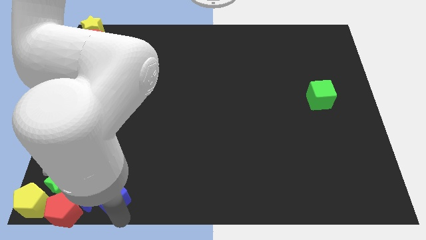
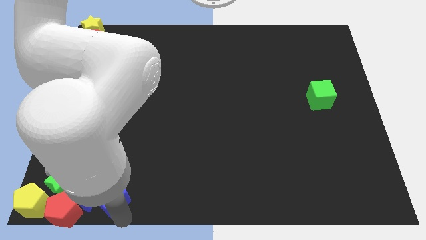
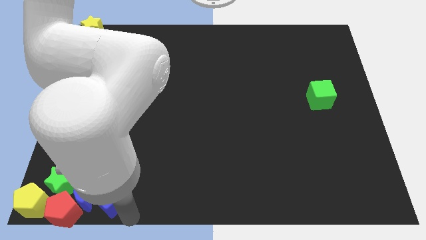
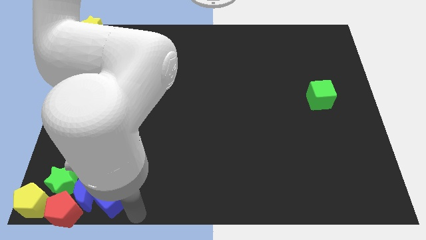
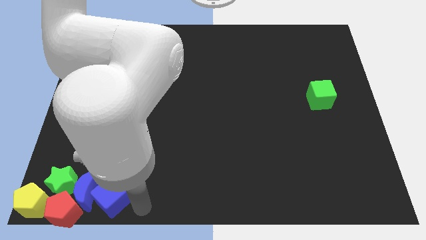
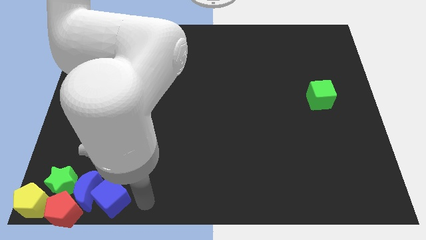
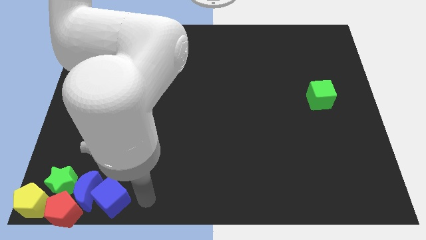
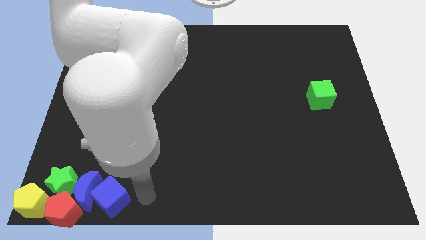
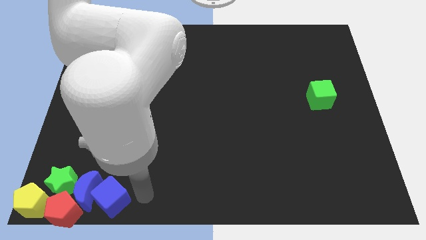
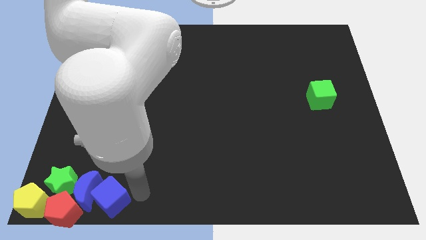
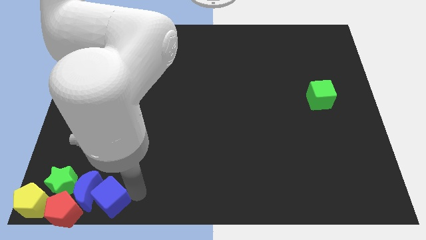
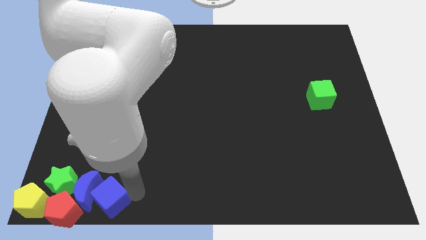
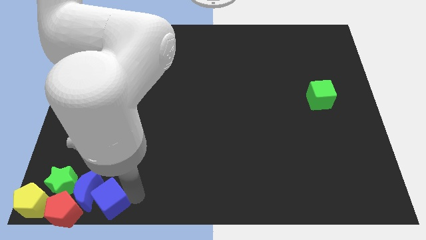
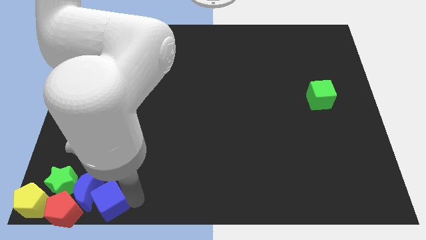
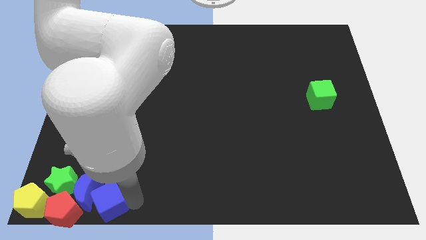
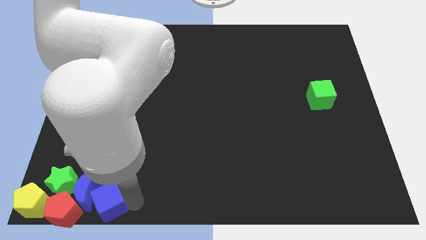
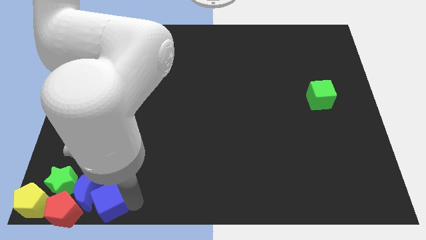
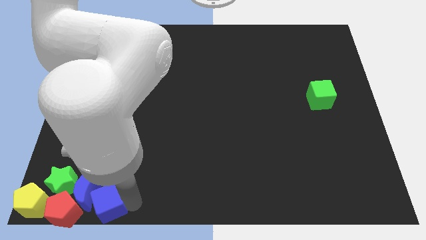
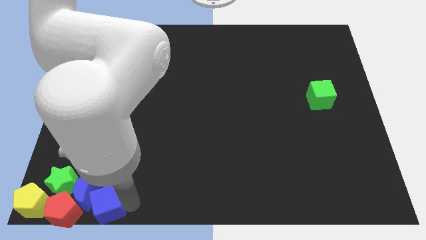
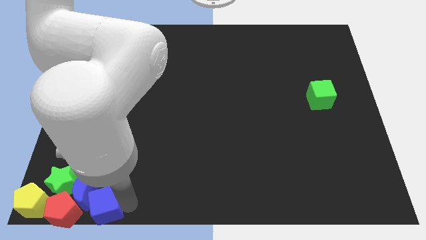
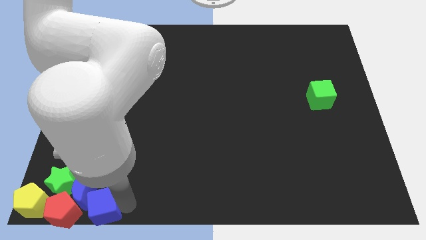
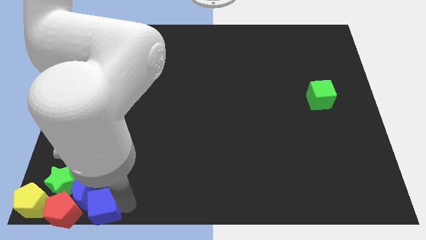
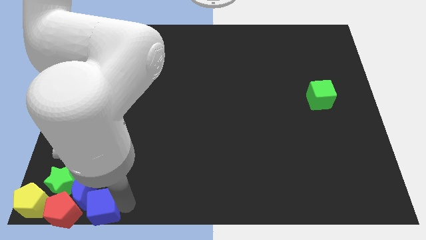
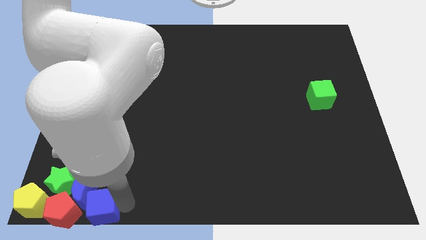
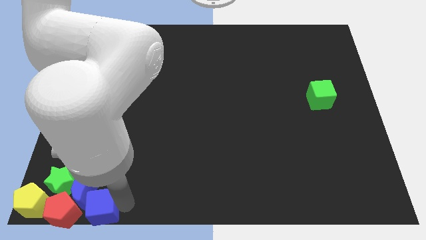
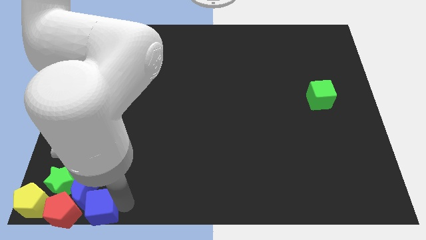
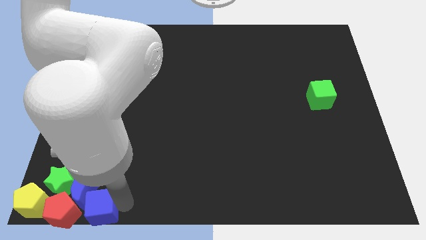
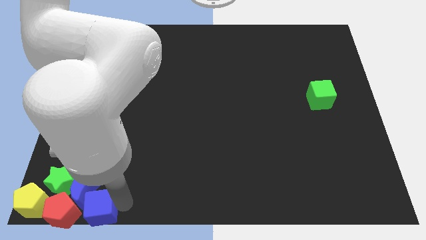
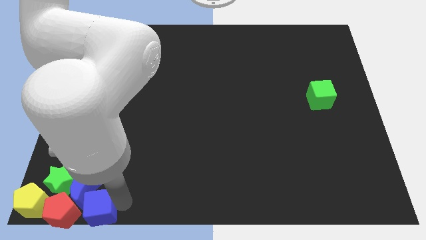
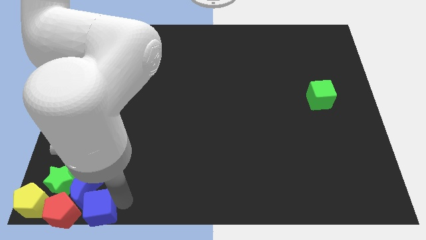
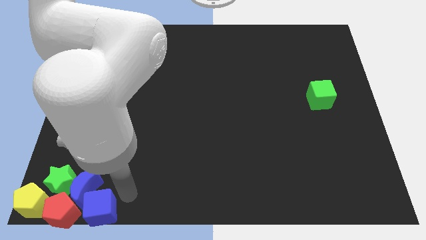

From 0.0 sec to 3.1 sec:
adjust the group of blocks at the bottom left side of the board

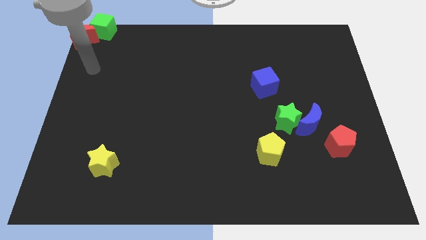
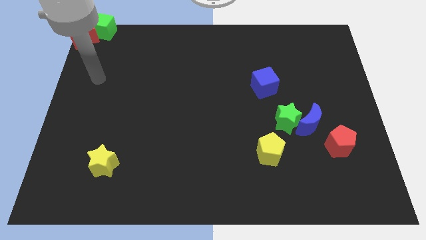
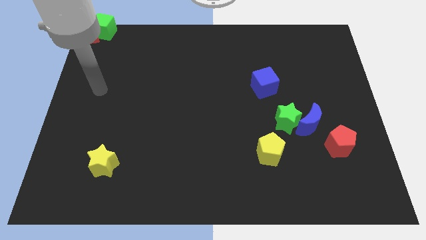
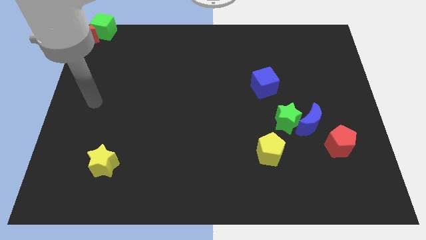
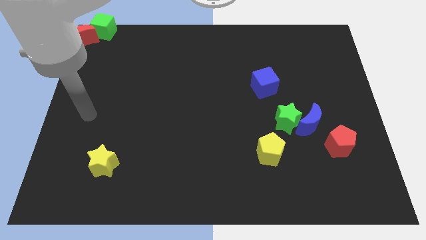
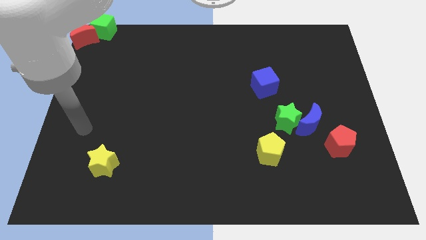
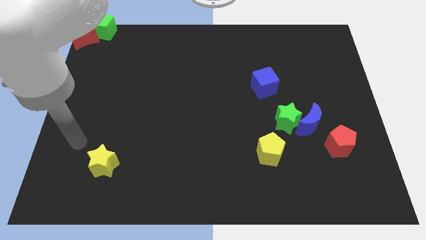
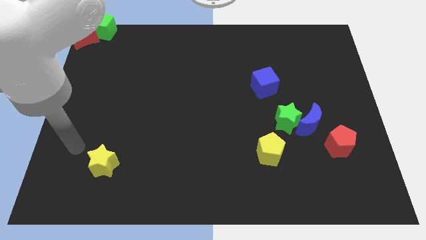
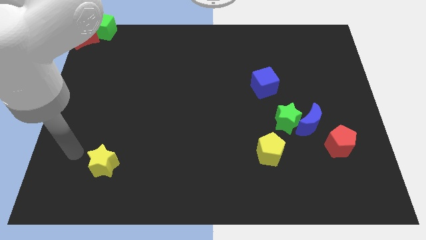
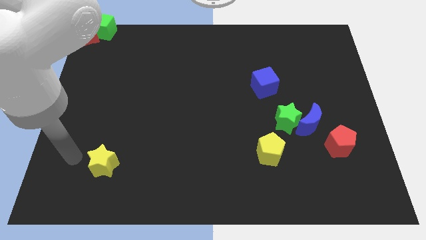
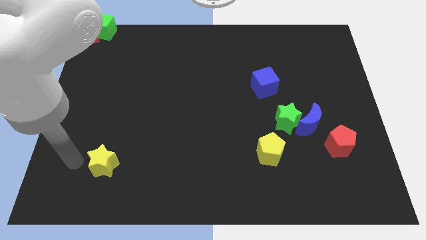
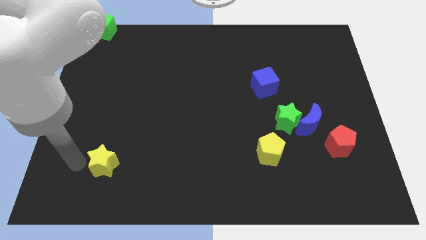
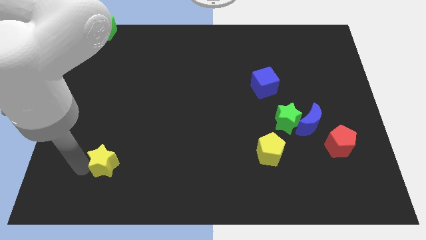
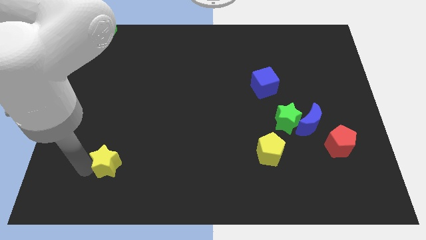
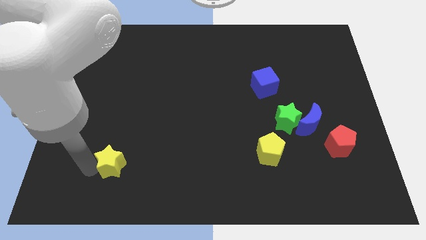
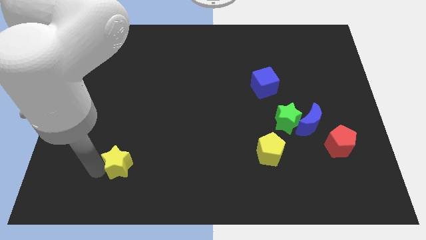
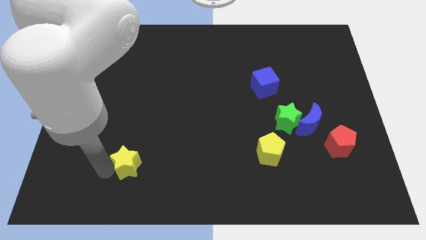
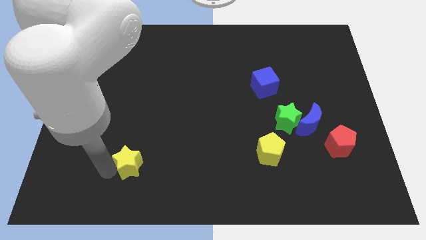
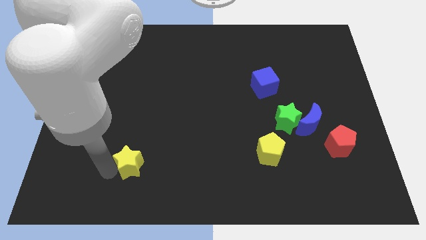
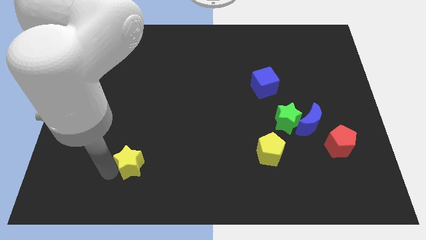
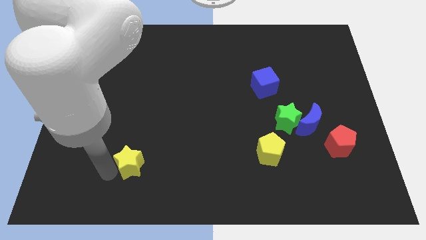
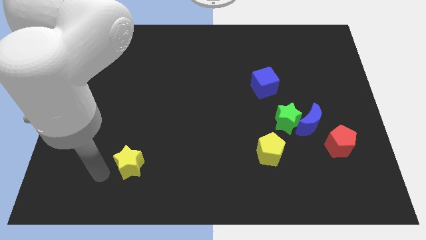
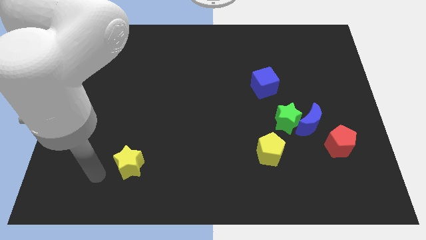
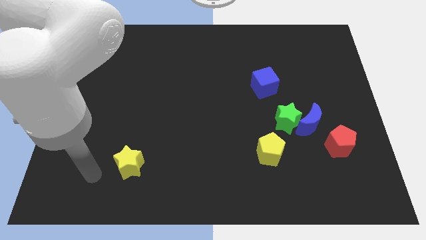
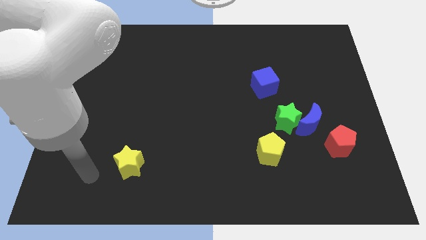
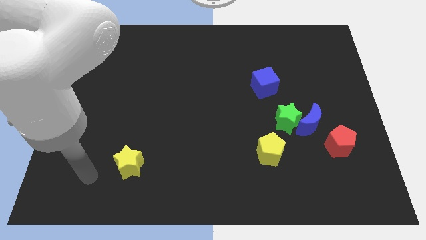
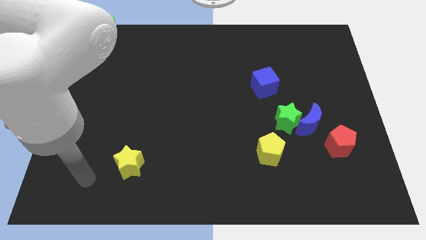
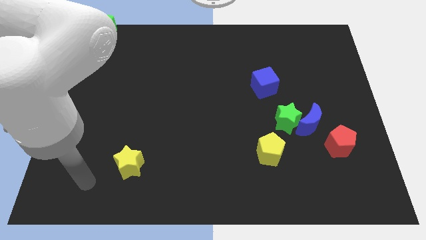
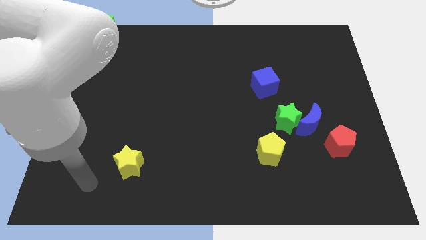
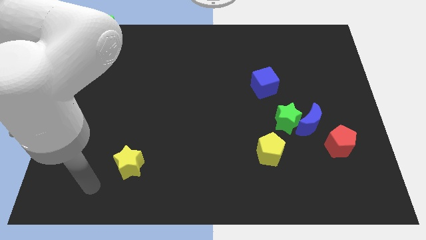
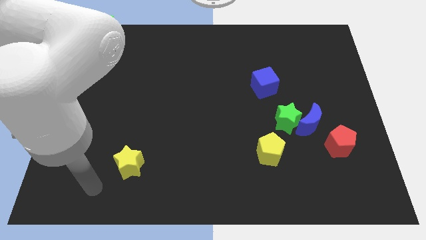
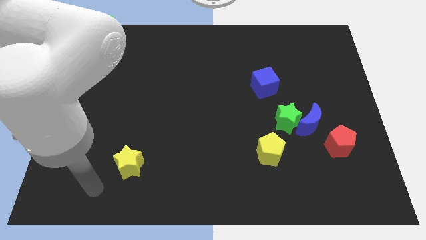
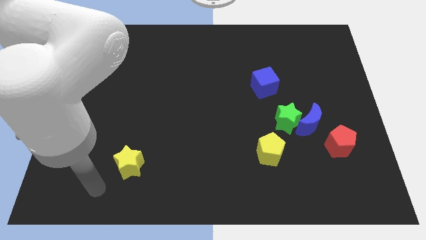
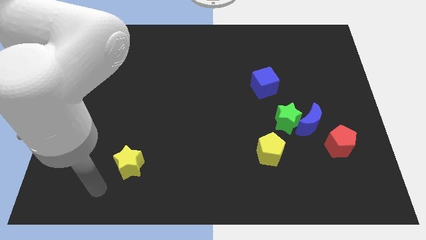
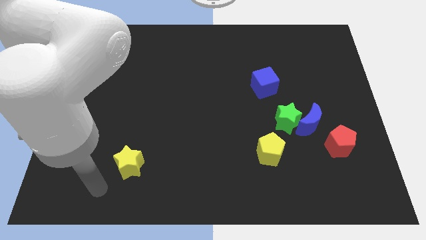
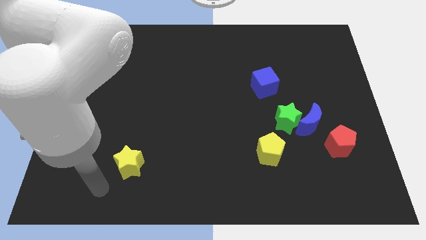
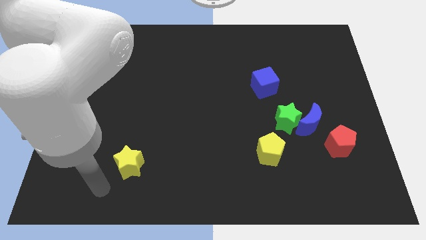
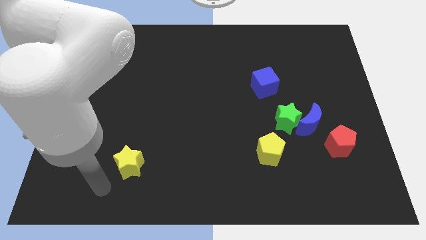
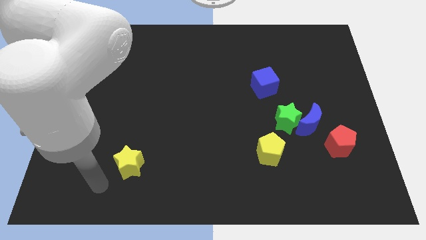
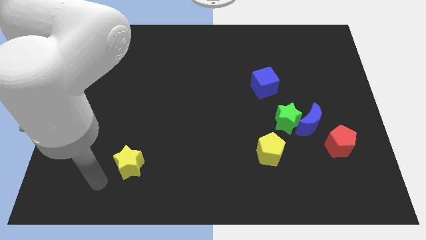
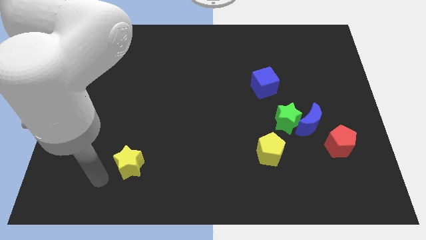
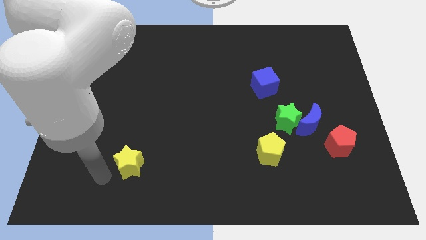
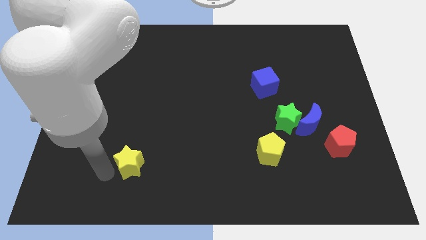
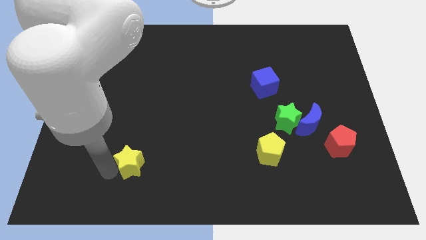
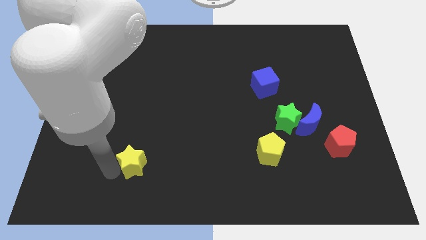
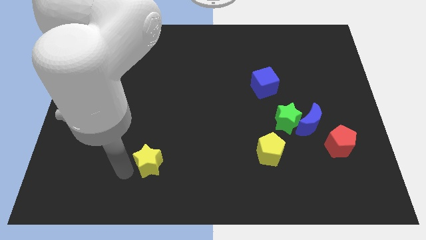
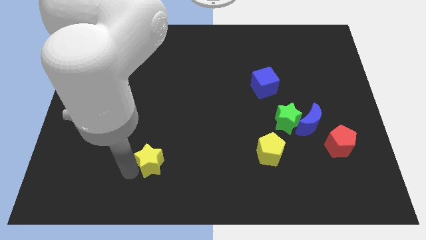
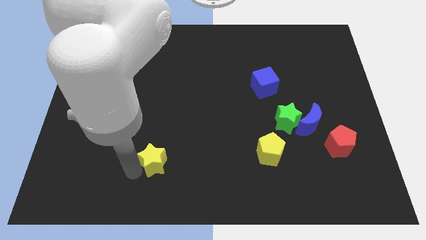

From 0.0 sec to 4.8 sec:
push the yellow star to the right of the board

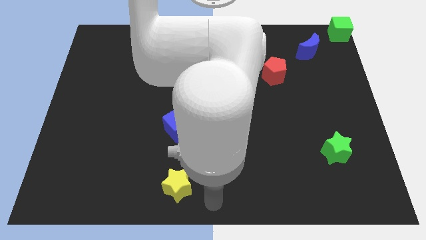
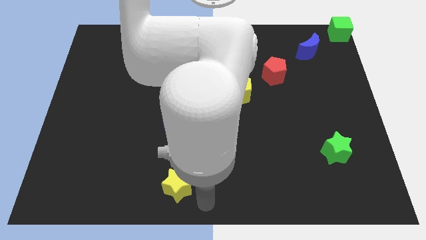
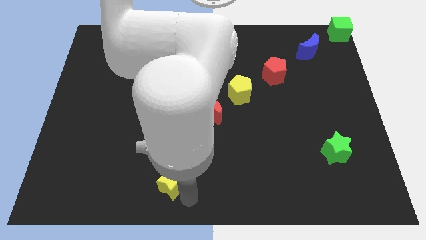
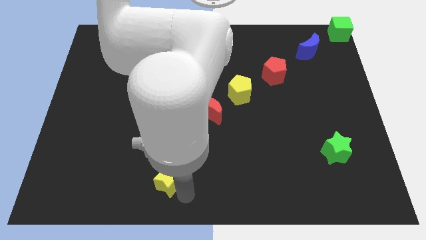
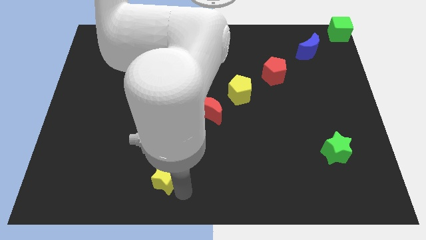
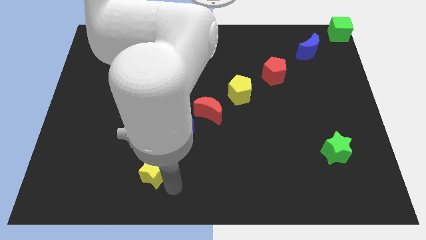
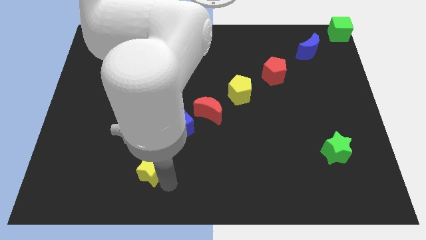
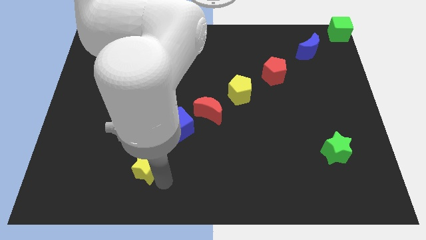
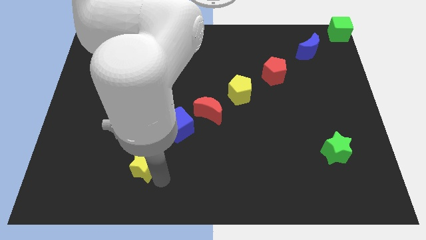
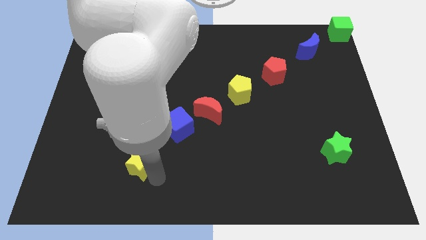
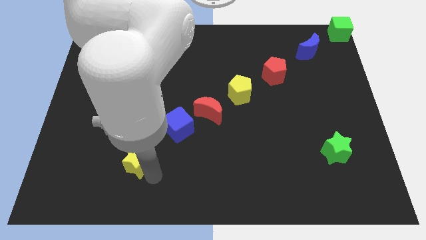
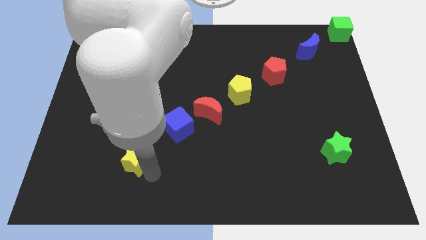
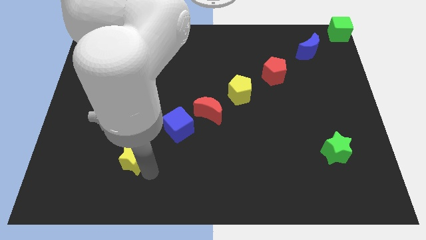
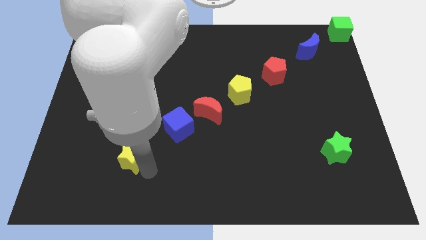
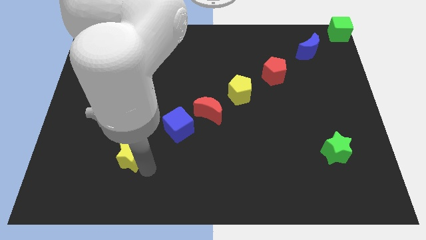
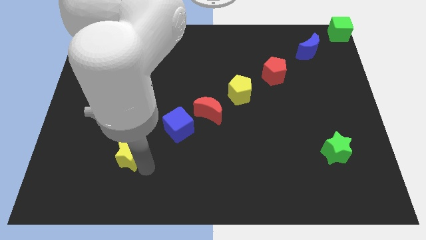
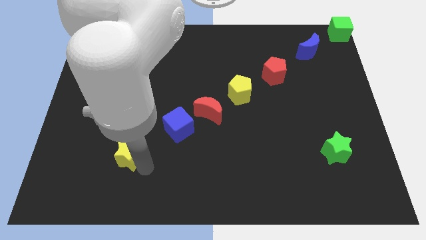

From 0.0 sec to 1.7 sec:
slide the yellow star towards the bottom left
